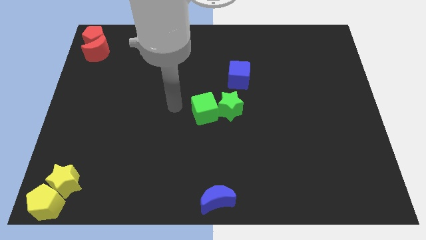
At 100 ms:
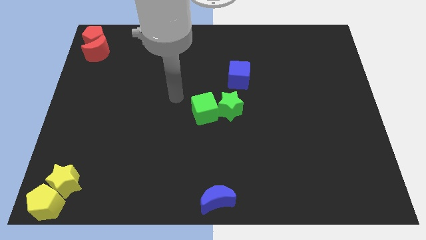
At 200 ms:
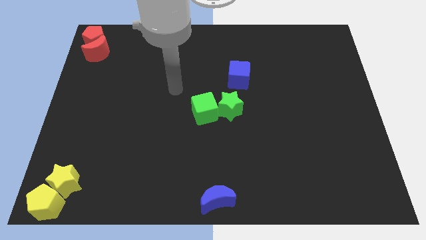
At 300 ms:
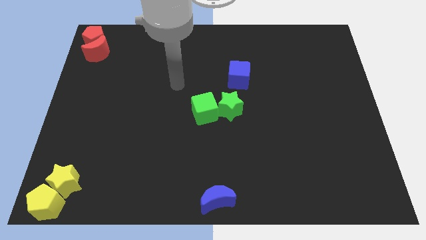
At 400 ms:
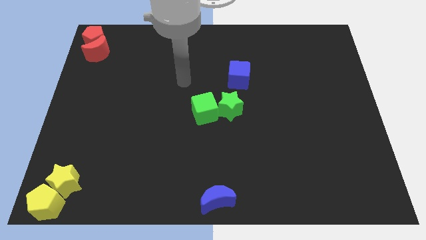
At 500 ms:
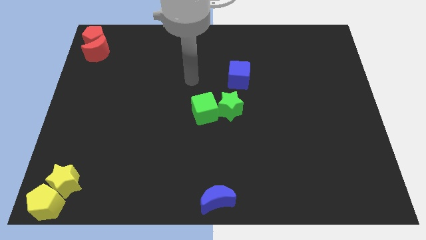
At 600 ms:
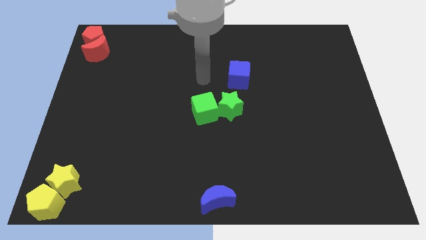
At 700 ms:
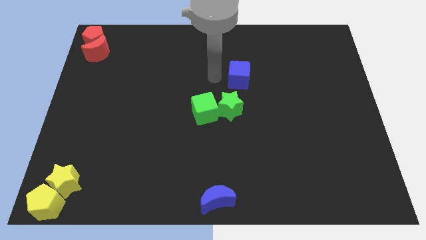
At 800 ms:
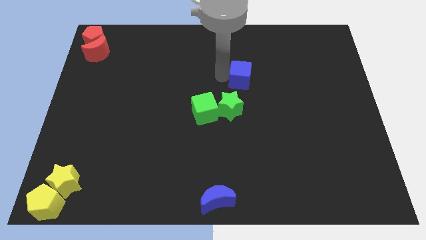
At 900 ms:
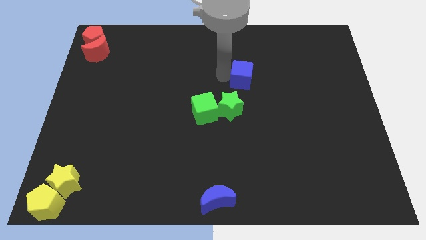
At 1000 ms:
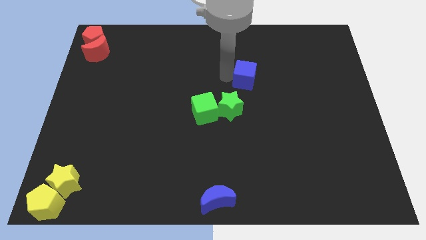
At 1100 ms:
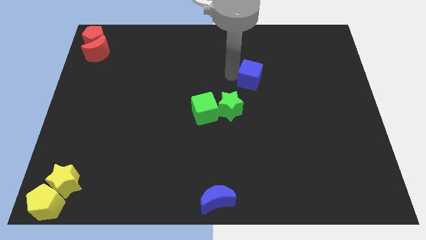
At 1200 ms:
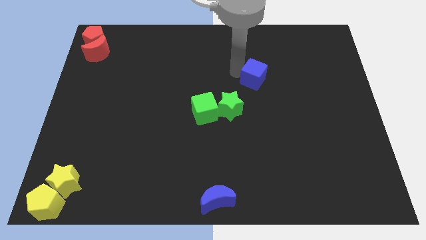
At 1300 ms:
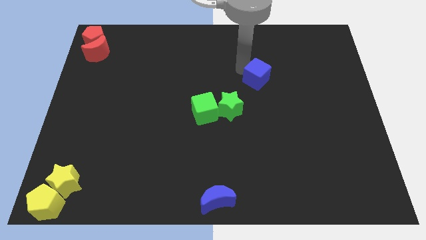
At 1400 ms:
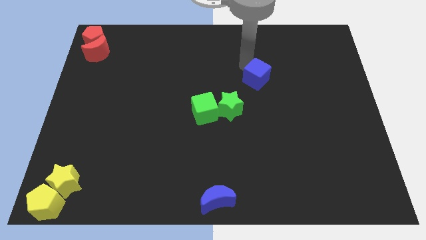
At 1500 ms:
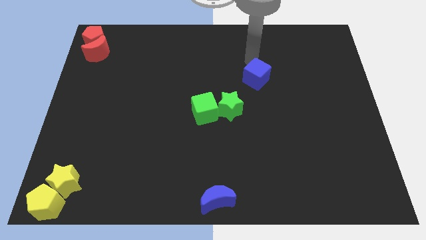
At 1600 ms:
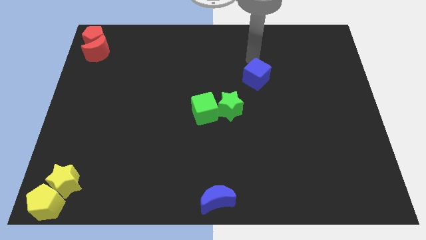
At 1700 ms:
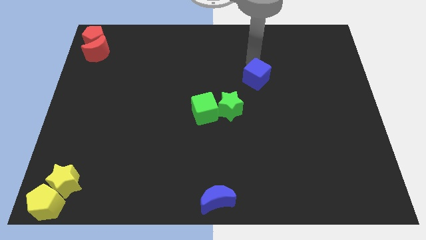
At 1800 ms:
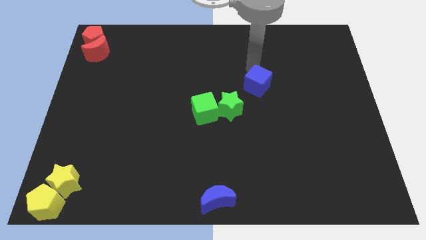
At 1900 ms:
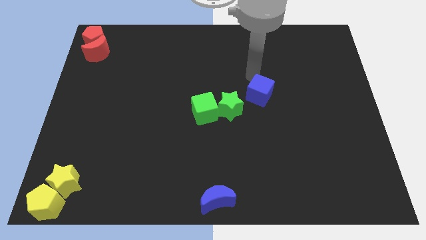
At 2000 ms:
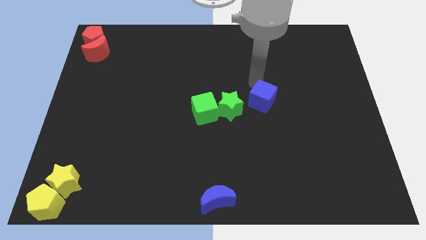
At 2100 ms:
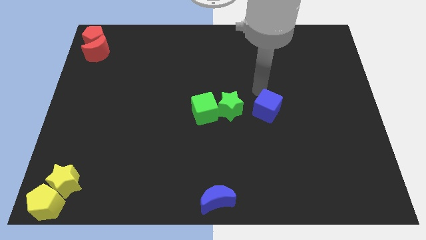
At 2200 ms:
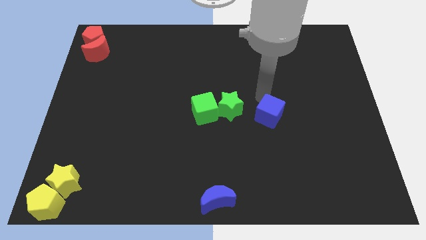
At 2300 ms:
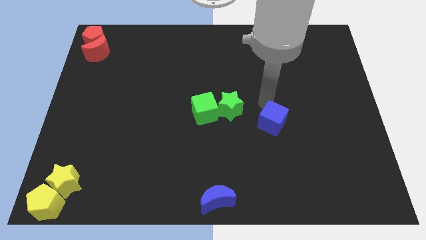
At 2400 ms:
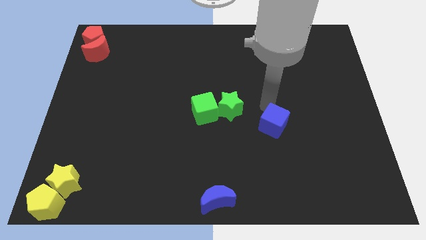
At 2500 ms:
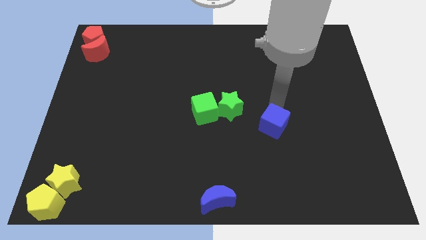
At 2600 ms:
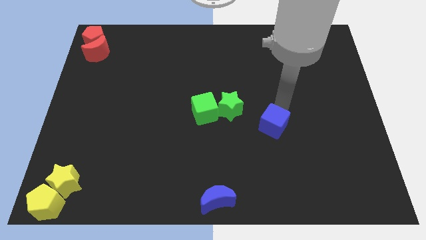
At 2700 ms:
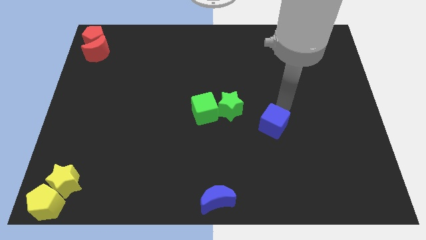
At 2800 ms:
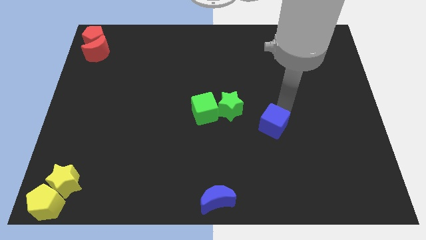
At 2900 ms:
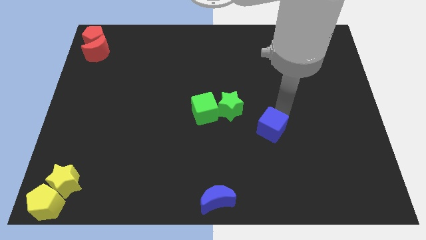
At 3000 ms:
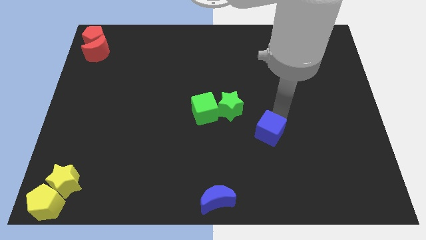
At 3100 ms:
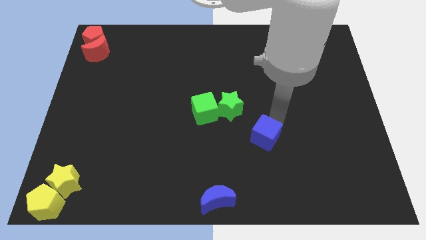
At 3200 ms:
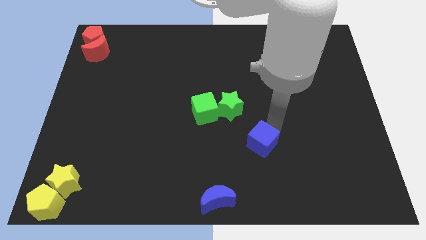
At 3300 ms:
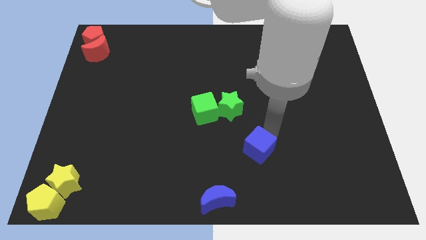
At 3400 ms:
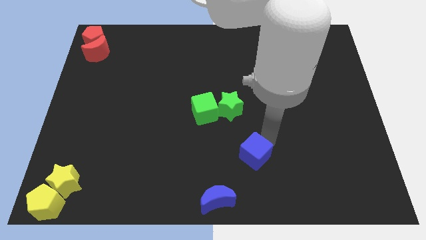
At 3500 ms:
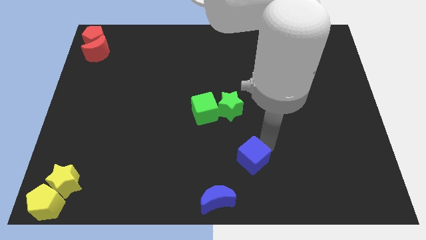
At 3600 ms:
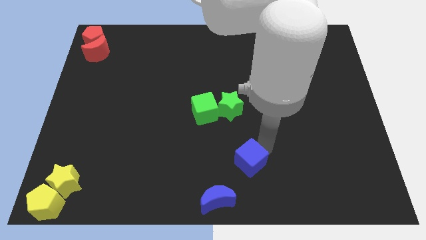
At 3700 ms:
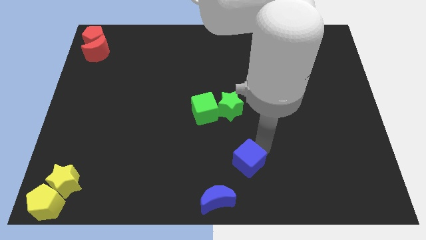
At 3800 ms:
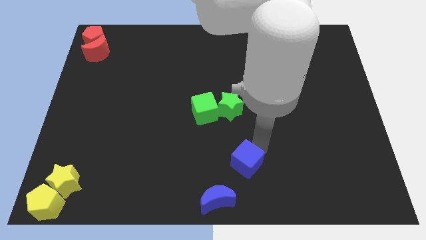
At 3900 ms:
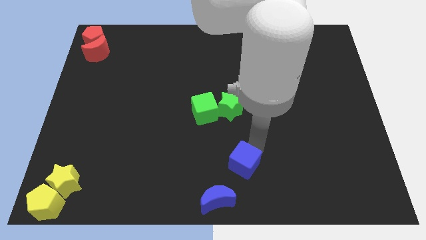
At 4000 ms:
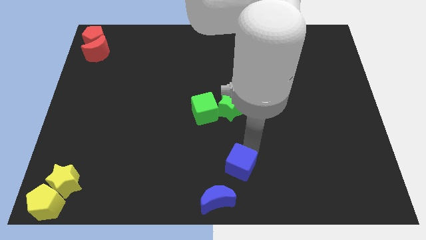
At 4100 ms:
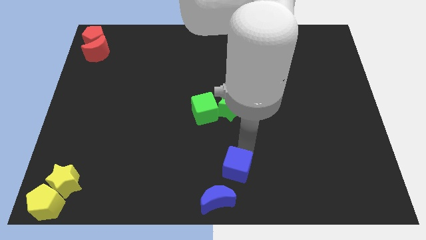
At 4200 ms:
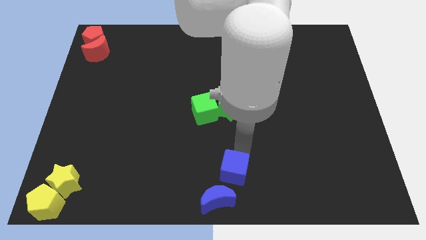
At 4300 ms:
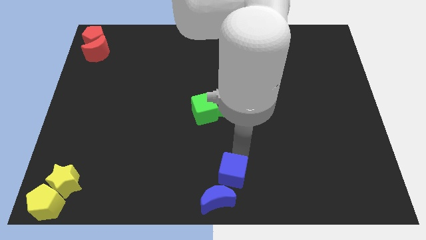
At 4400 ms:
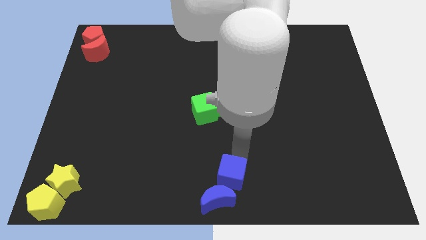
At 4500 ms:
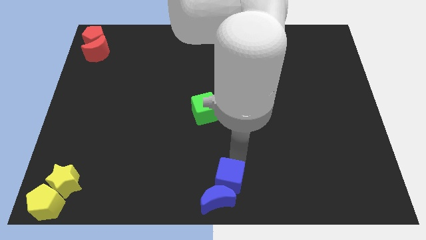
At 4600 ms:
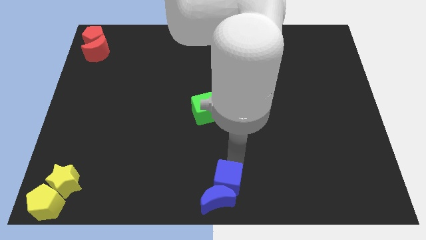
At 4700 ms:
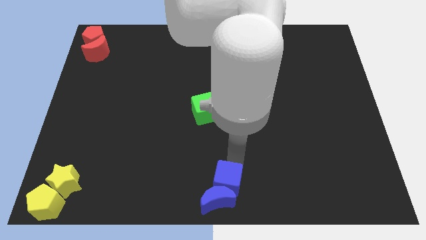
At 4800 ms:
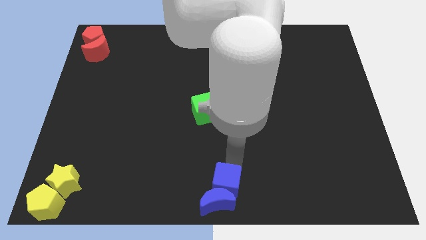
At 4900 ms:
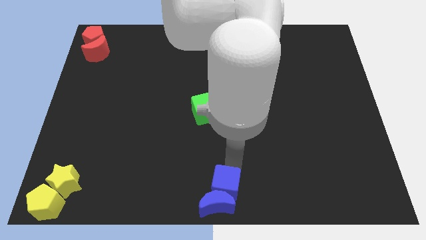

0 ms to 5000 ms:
place the blue cube to the top of the blue moon towards the bottom center

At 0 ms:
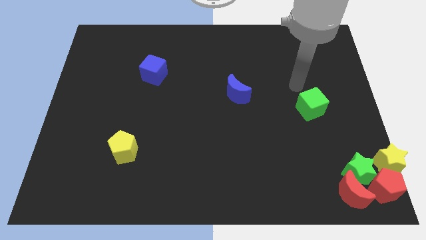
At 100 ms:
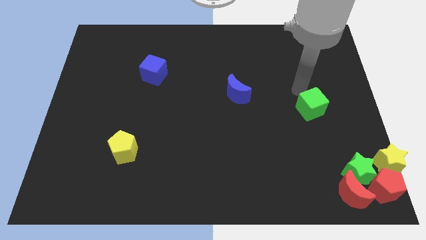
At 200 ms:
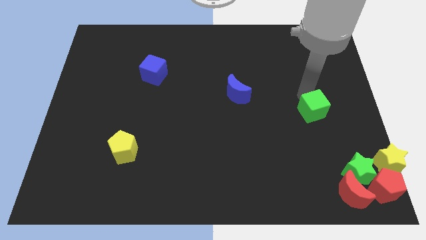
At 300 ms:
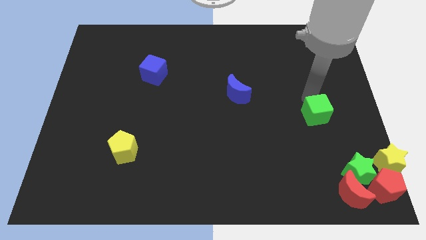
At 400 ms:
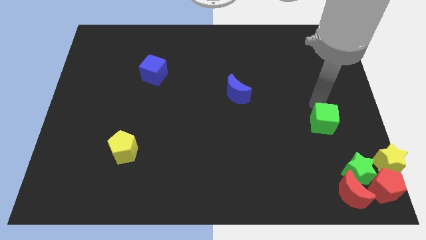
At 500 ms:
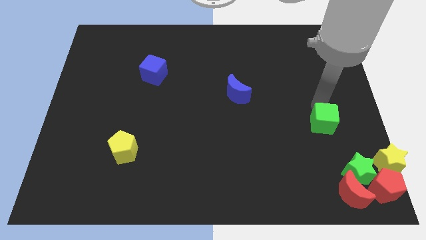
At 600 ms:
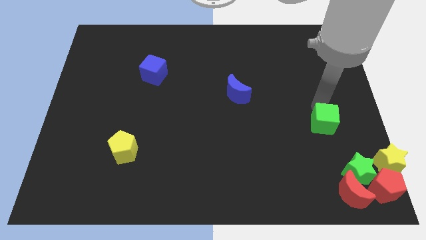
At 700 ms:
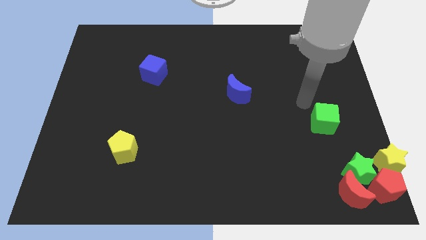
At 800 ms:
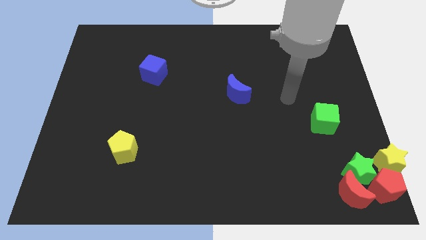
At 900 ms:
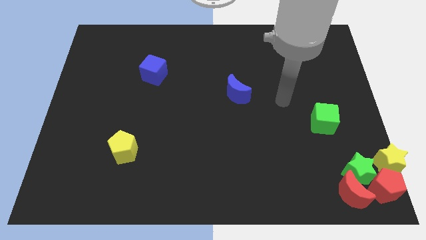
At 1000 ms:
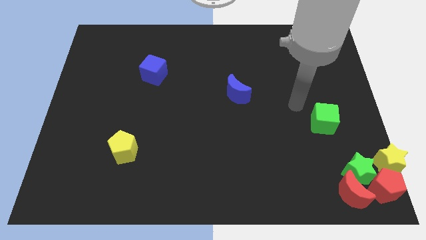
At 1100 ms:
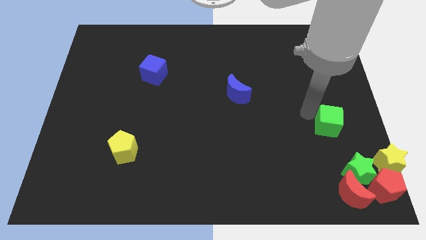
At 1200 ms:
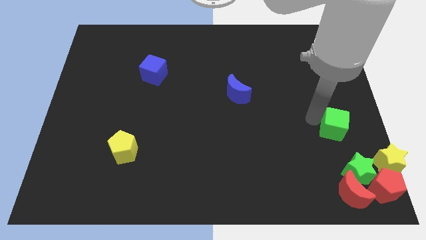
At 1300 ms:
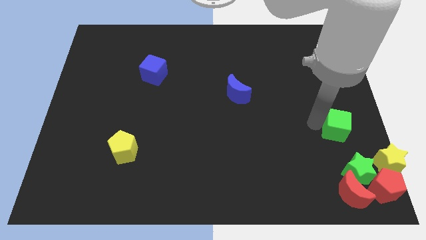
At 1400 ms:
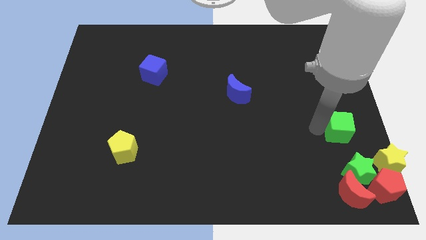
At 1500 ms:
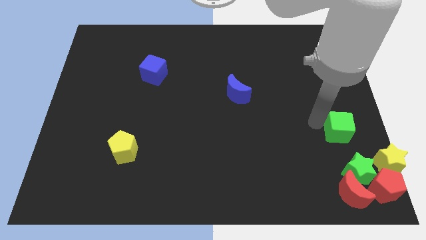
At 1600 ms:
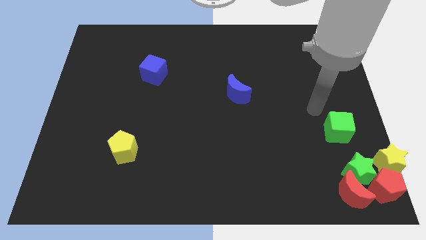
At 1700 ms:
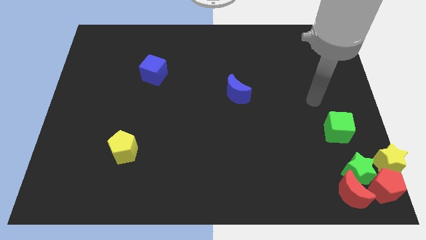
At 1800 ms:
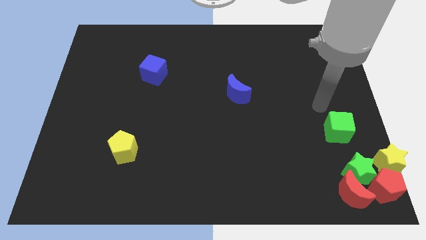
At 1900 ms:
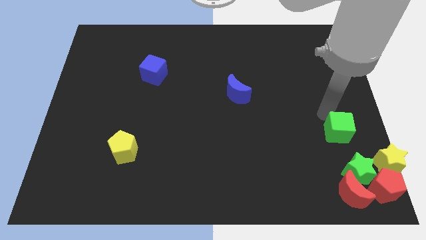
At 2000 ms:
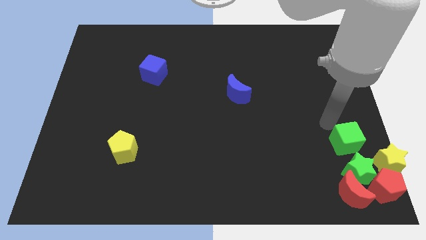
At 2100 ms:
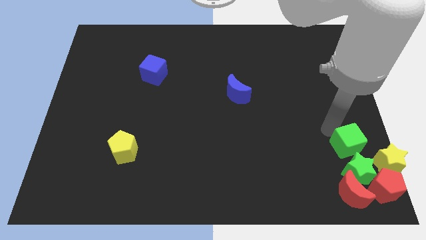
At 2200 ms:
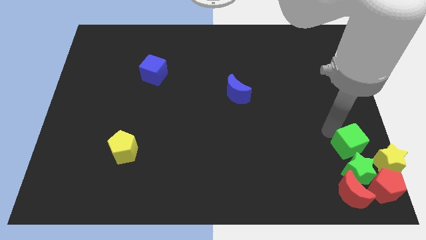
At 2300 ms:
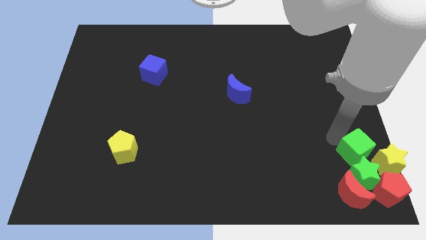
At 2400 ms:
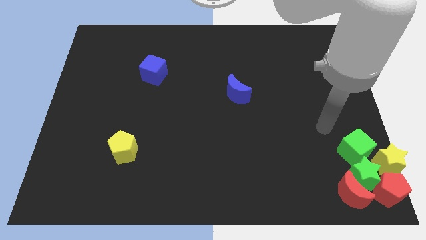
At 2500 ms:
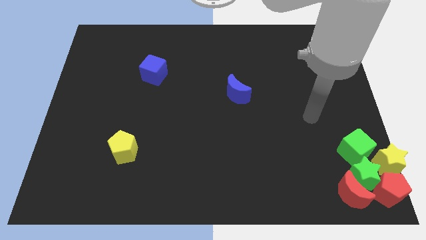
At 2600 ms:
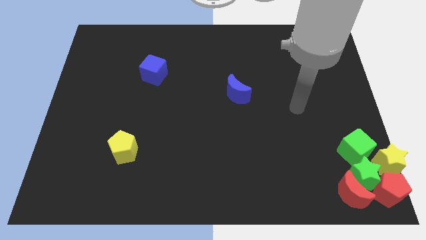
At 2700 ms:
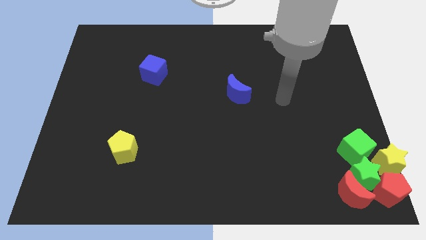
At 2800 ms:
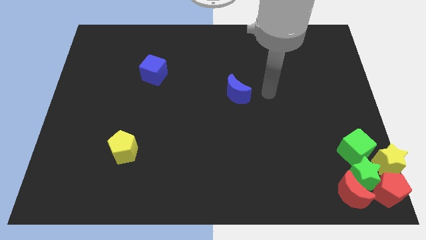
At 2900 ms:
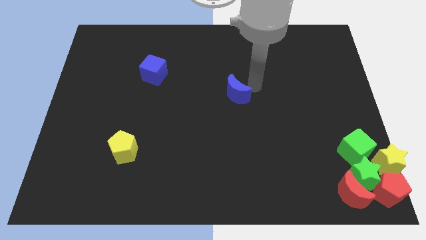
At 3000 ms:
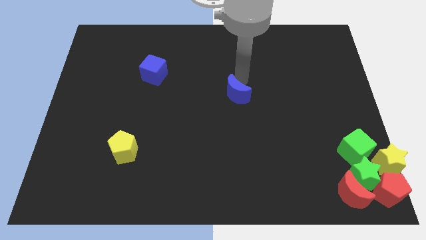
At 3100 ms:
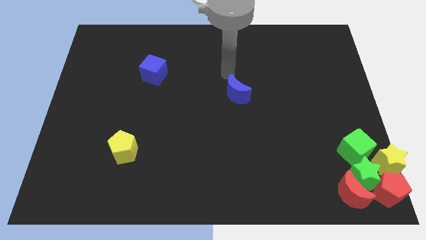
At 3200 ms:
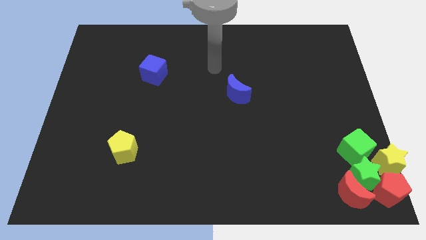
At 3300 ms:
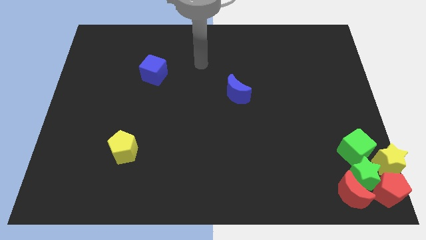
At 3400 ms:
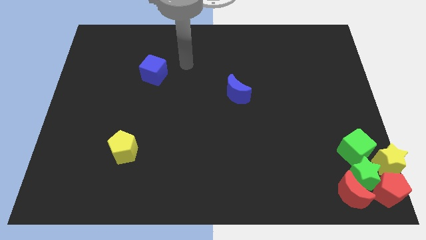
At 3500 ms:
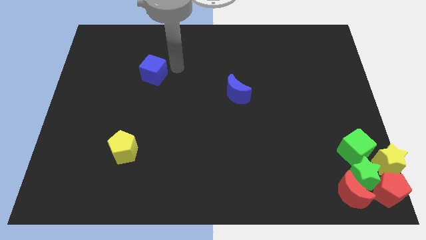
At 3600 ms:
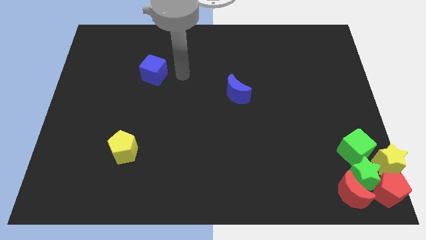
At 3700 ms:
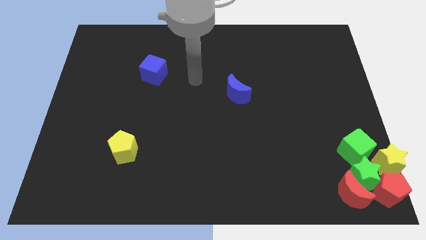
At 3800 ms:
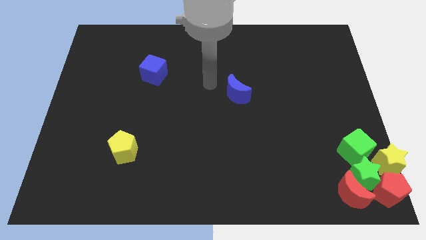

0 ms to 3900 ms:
move the green cube towards the right bottom of the board
